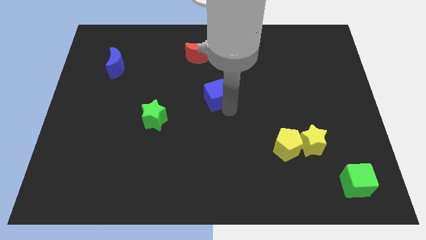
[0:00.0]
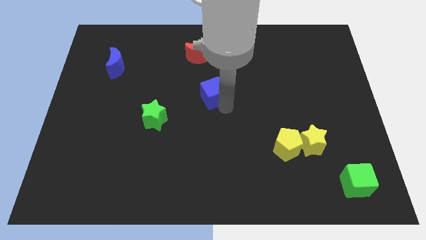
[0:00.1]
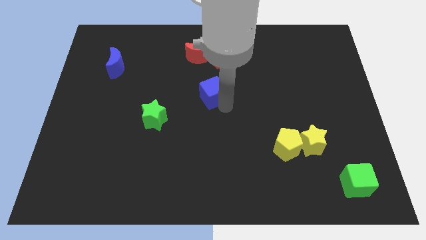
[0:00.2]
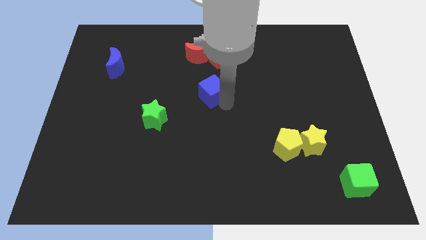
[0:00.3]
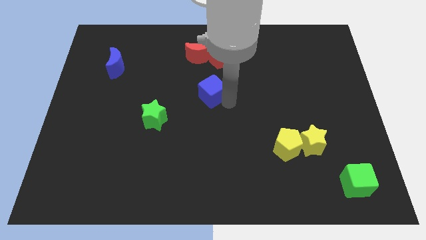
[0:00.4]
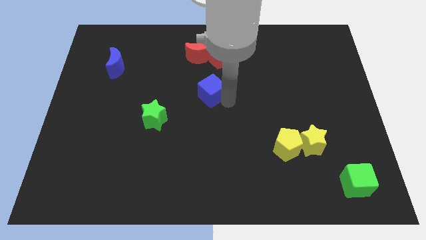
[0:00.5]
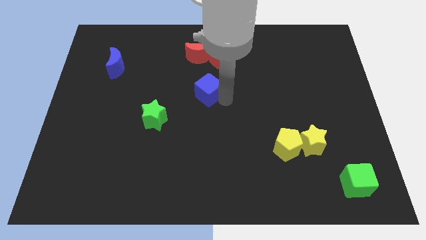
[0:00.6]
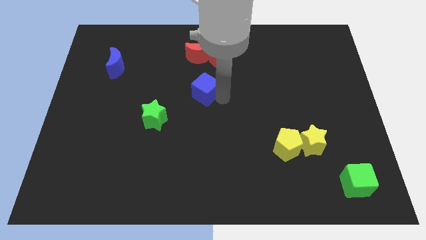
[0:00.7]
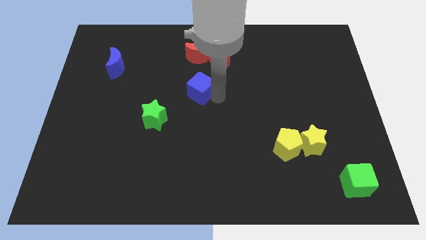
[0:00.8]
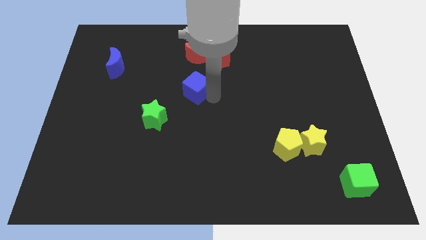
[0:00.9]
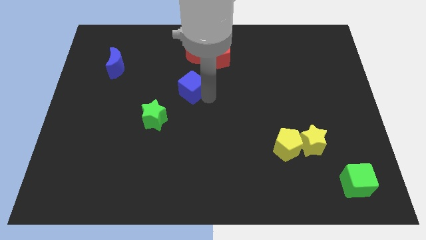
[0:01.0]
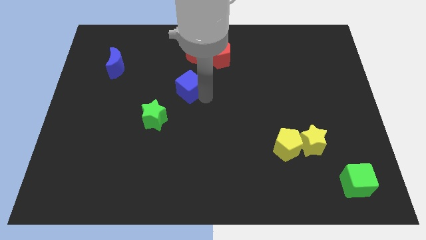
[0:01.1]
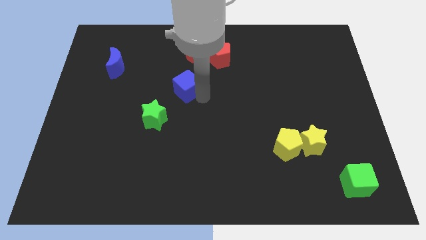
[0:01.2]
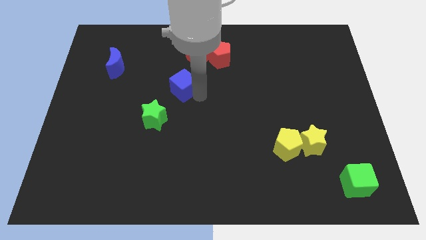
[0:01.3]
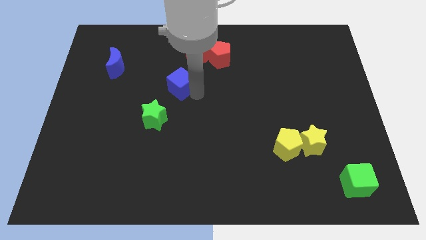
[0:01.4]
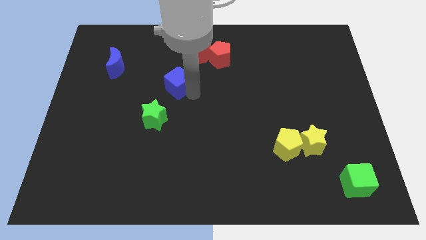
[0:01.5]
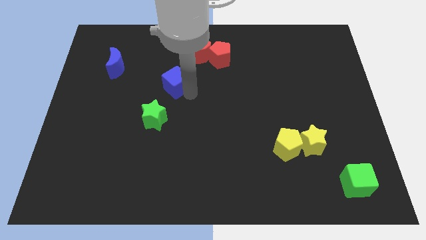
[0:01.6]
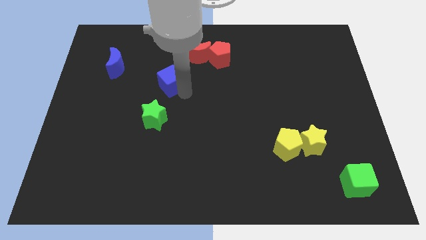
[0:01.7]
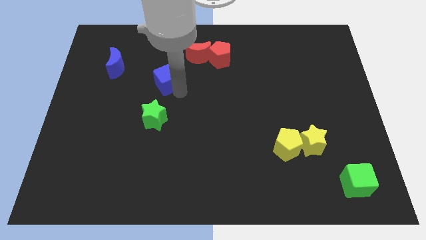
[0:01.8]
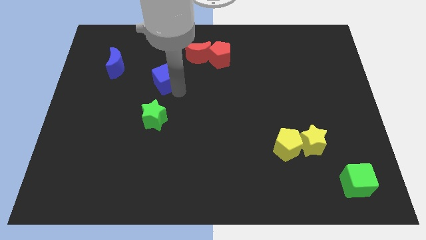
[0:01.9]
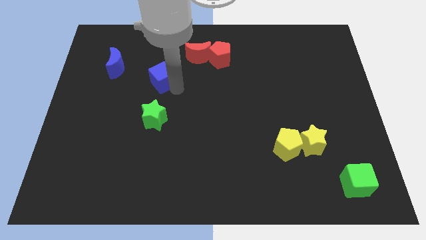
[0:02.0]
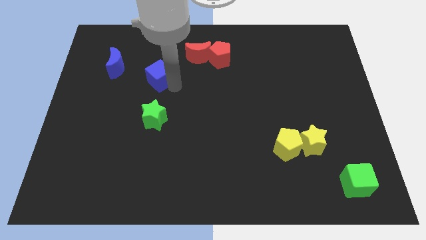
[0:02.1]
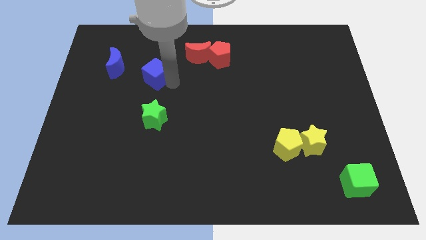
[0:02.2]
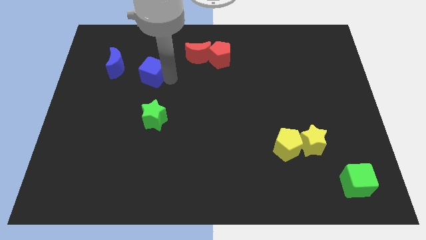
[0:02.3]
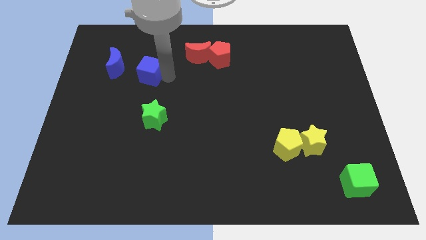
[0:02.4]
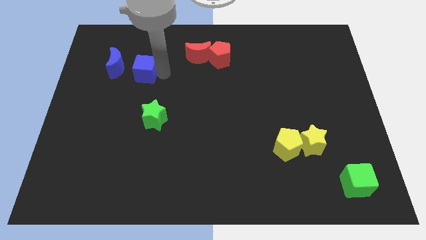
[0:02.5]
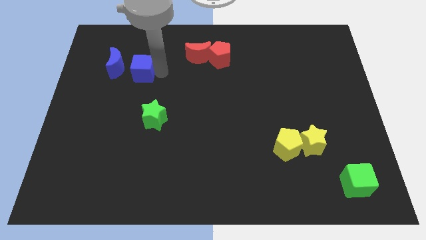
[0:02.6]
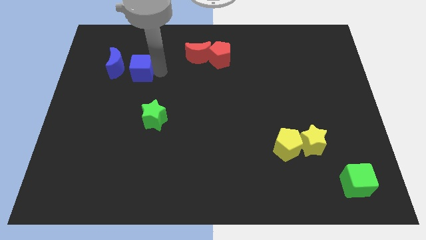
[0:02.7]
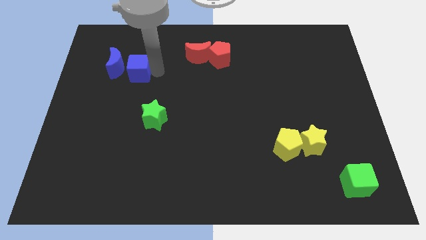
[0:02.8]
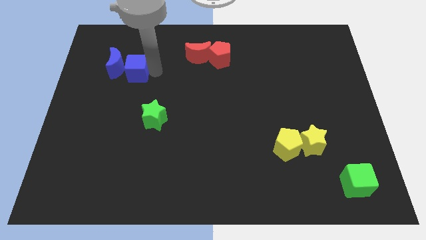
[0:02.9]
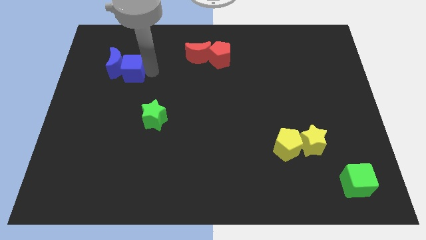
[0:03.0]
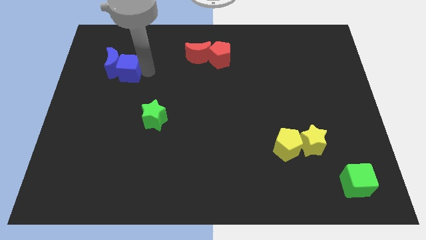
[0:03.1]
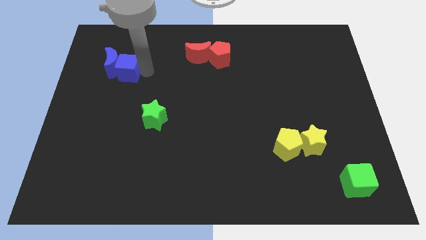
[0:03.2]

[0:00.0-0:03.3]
move blue cube to the right side of blue moon

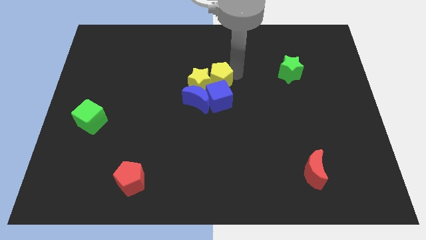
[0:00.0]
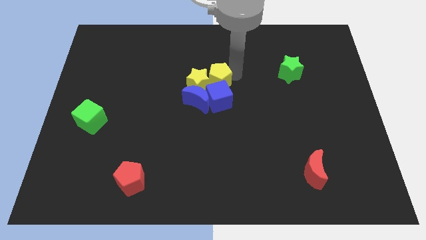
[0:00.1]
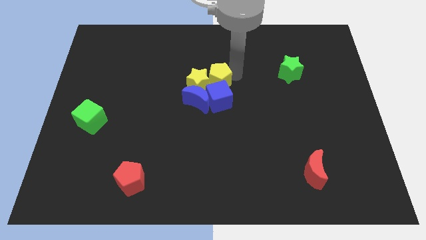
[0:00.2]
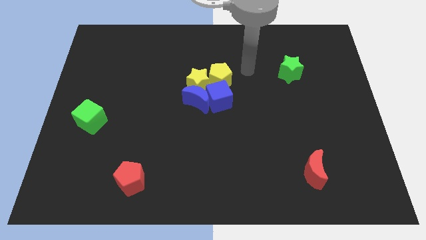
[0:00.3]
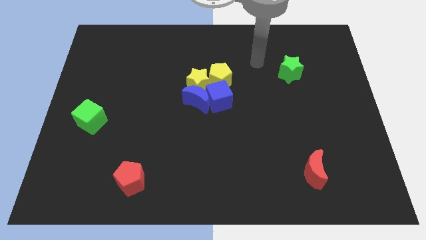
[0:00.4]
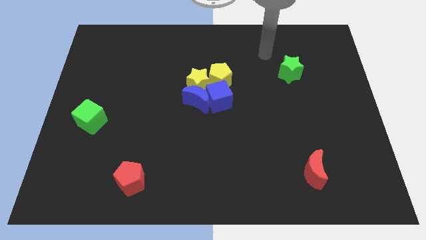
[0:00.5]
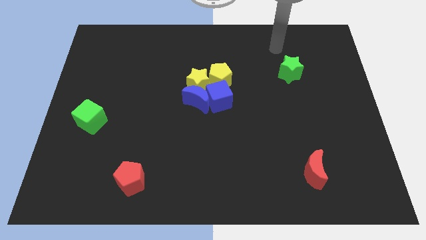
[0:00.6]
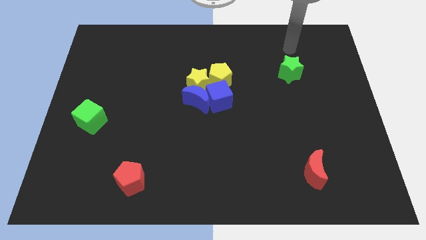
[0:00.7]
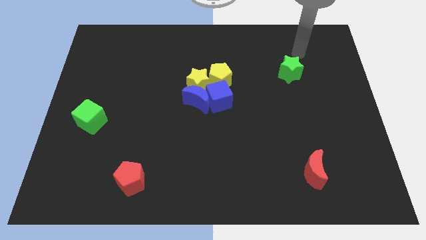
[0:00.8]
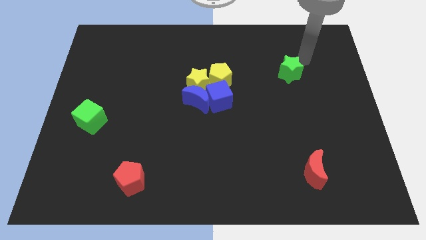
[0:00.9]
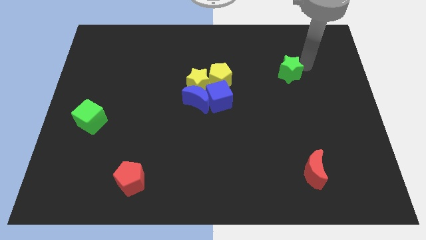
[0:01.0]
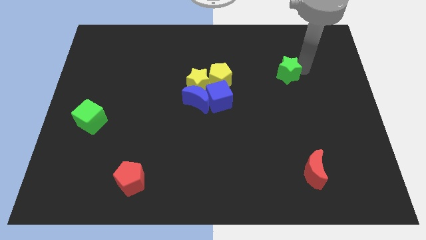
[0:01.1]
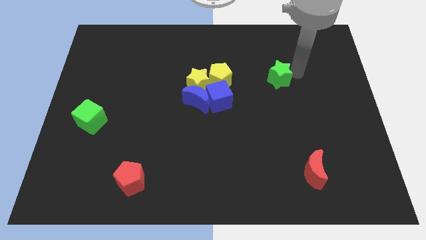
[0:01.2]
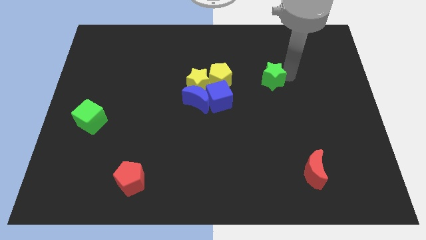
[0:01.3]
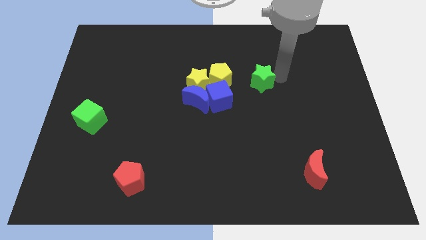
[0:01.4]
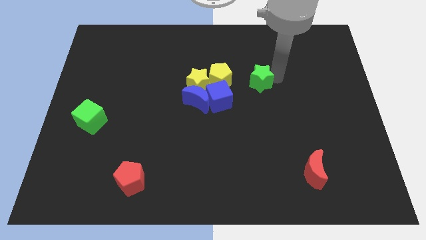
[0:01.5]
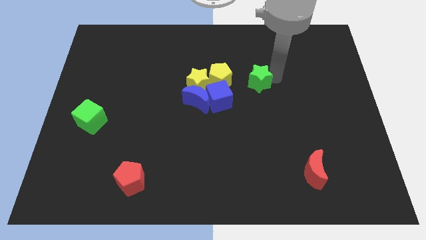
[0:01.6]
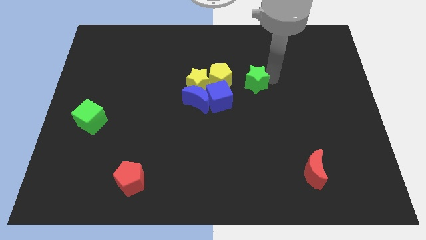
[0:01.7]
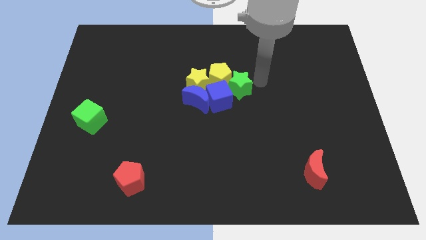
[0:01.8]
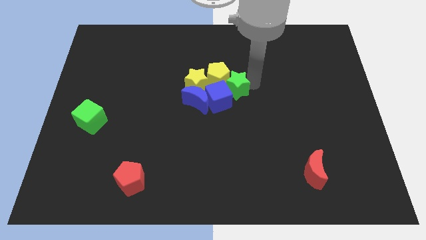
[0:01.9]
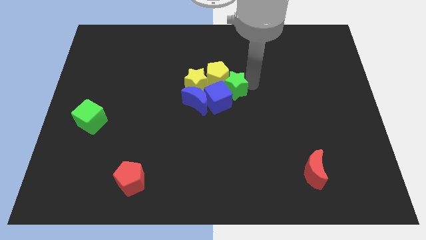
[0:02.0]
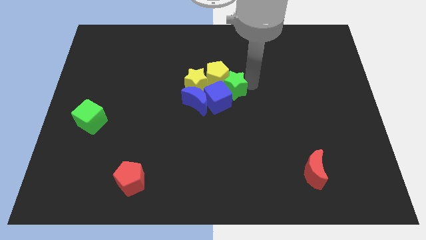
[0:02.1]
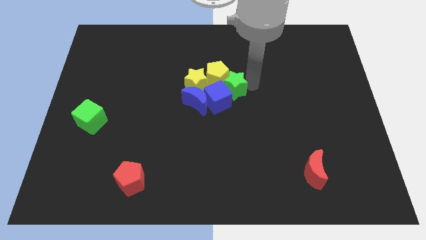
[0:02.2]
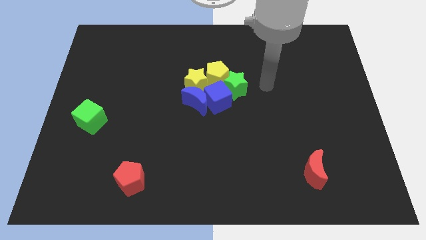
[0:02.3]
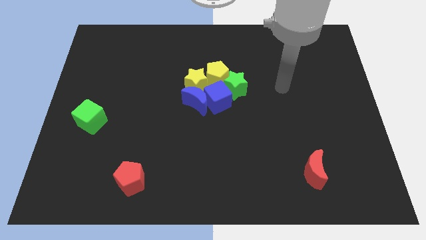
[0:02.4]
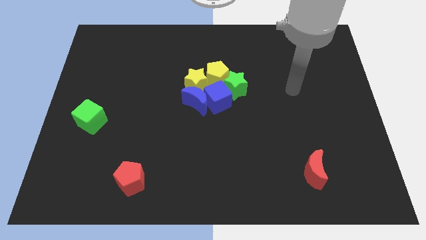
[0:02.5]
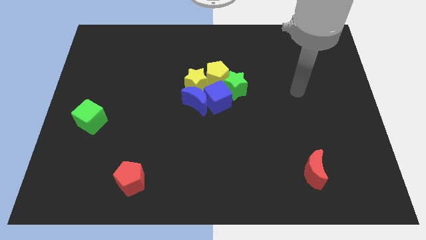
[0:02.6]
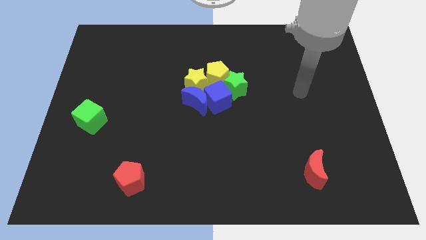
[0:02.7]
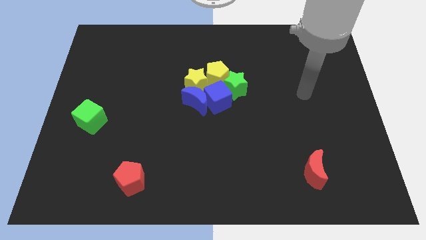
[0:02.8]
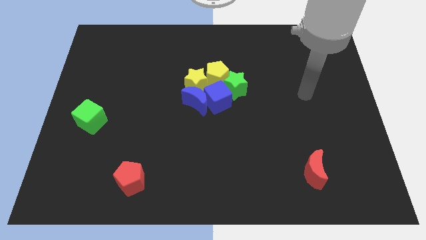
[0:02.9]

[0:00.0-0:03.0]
move the green star right beside the blue cube and yellow pentagon

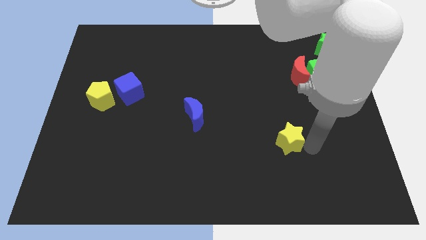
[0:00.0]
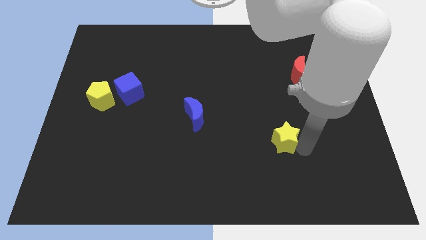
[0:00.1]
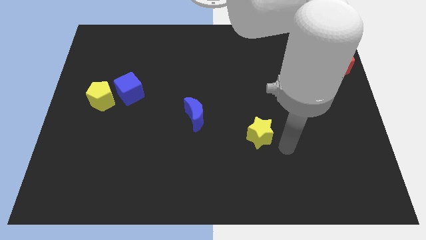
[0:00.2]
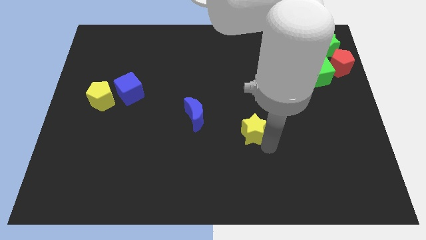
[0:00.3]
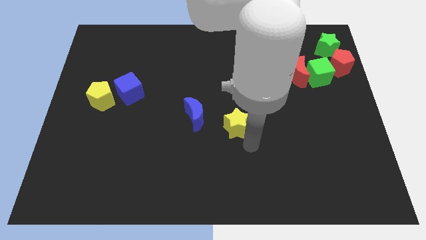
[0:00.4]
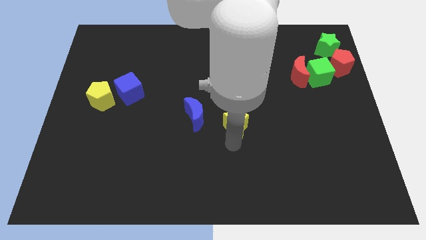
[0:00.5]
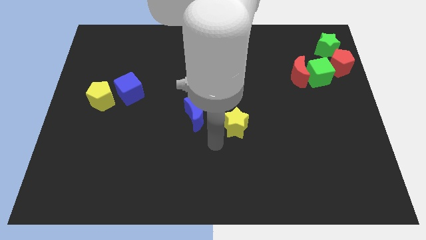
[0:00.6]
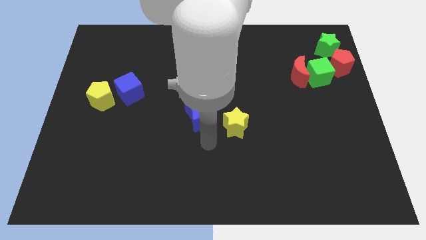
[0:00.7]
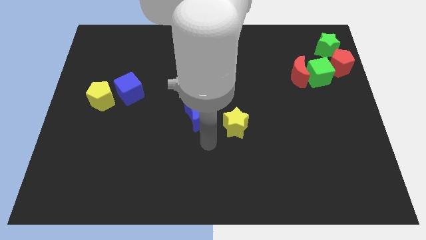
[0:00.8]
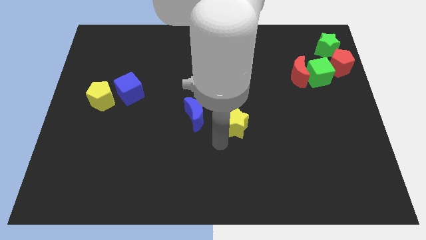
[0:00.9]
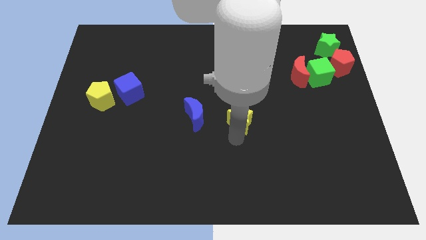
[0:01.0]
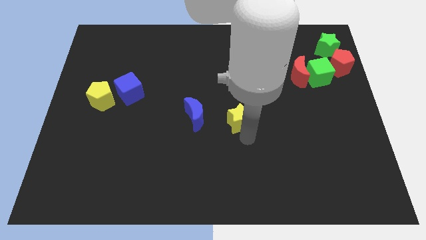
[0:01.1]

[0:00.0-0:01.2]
move the yellow star to the center of the board

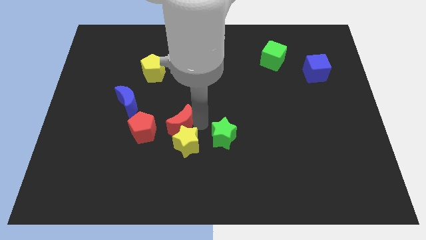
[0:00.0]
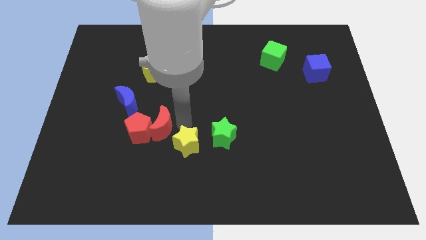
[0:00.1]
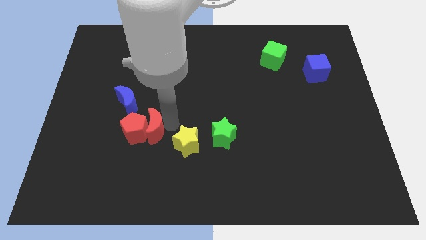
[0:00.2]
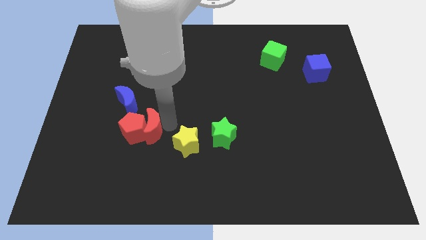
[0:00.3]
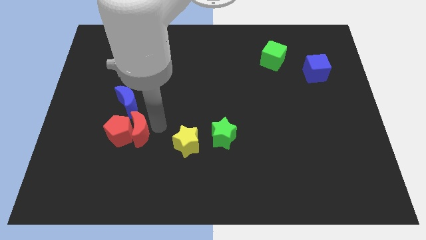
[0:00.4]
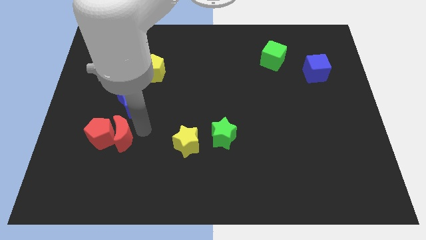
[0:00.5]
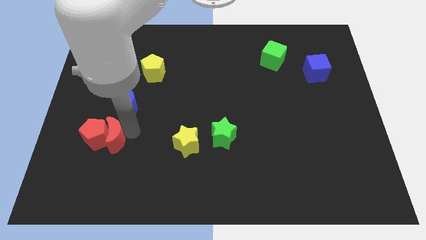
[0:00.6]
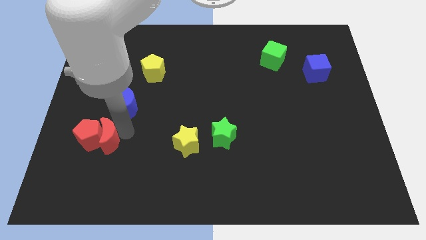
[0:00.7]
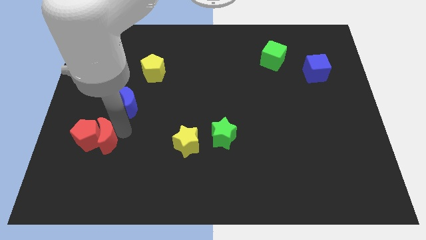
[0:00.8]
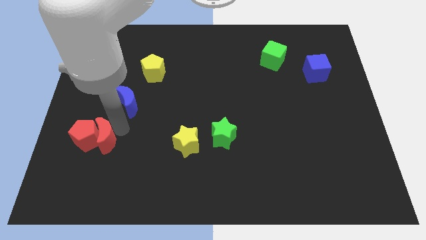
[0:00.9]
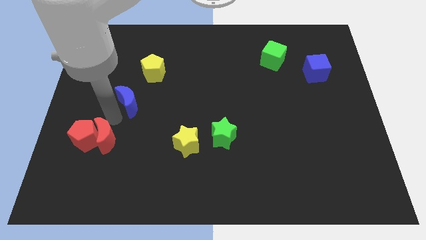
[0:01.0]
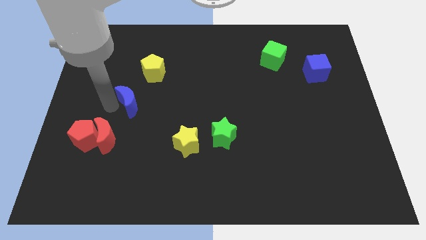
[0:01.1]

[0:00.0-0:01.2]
move red crescent along with red pentagon towards left side of the board

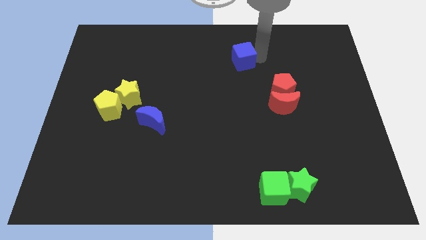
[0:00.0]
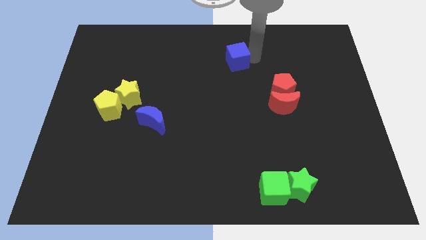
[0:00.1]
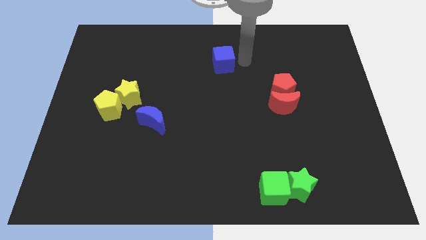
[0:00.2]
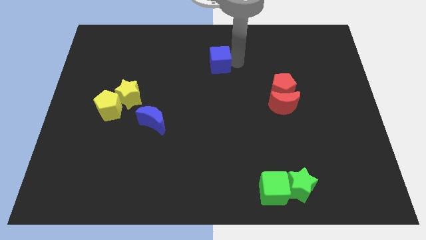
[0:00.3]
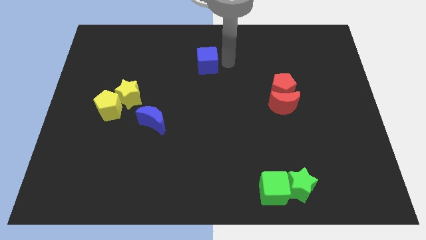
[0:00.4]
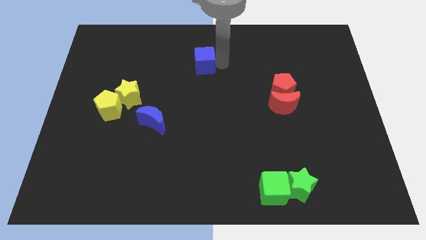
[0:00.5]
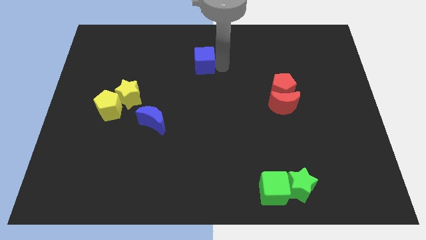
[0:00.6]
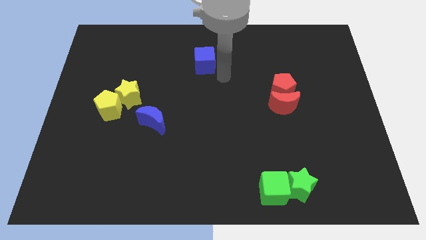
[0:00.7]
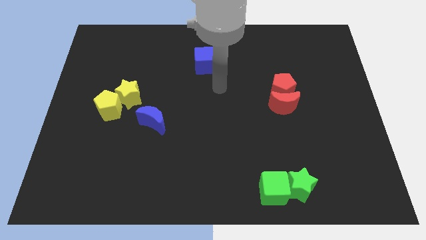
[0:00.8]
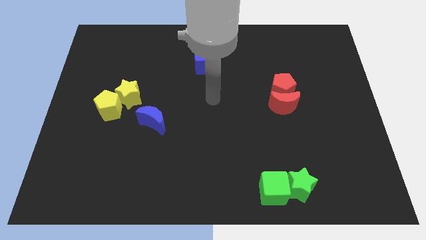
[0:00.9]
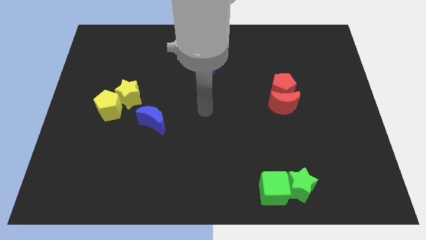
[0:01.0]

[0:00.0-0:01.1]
place the blue cube towards the top center of the board
